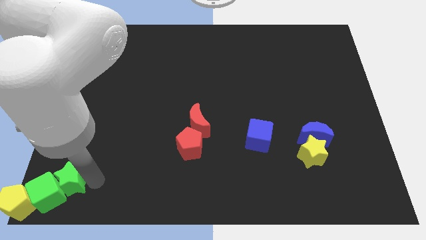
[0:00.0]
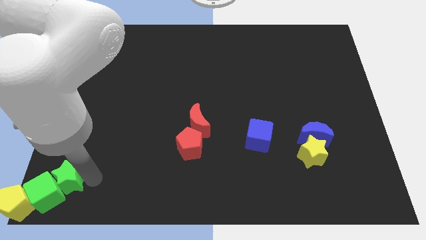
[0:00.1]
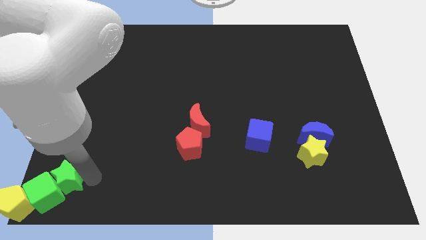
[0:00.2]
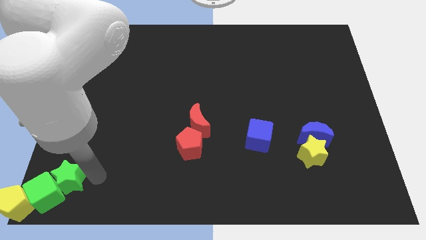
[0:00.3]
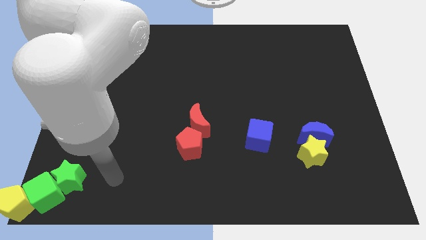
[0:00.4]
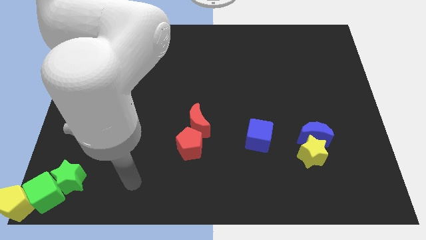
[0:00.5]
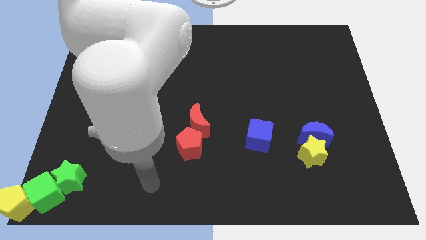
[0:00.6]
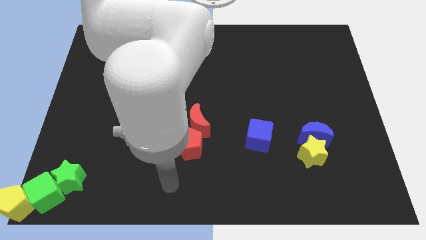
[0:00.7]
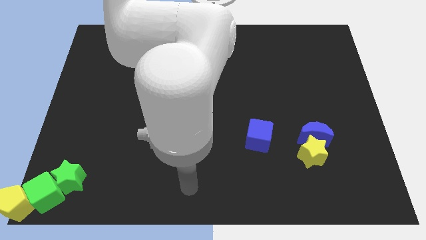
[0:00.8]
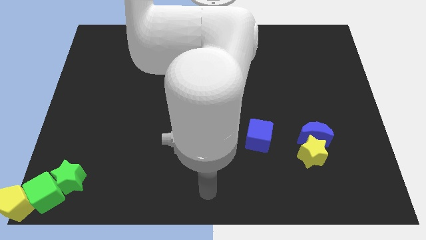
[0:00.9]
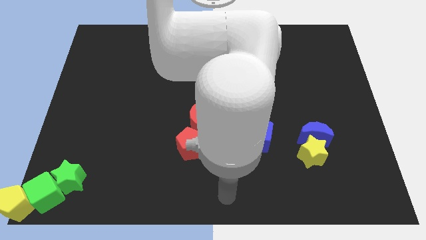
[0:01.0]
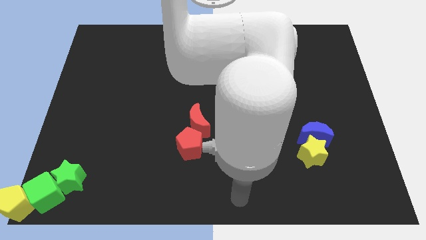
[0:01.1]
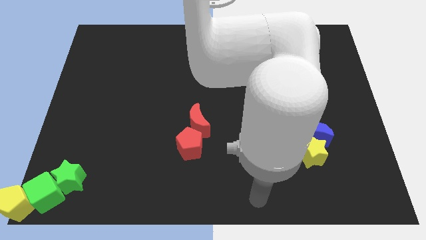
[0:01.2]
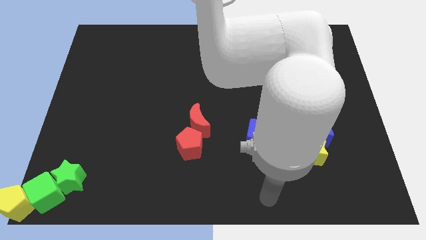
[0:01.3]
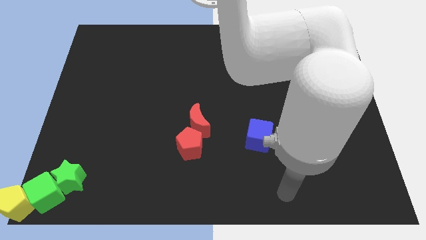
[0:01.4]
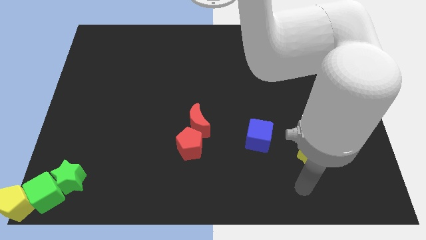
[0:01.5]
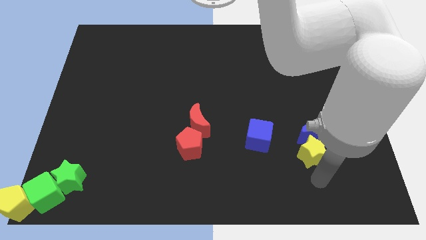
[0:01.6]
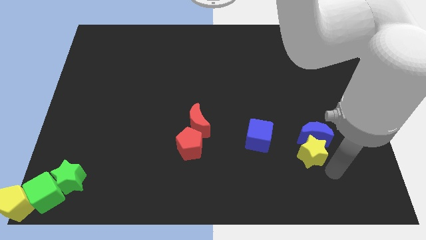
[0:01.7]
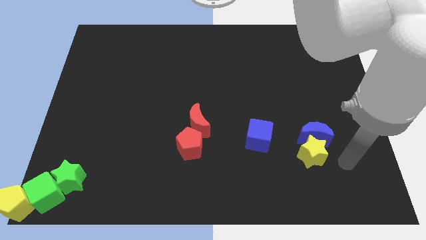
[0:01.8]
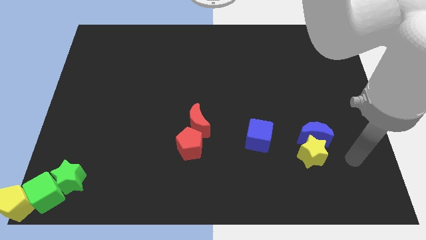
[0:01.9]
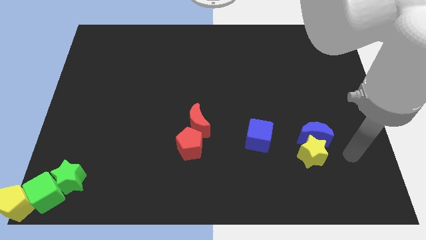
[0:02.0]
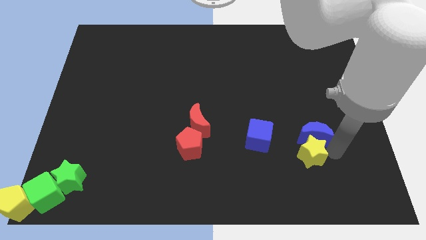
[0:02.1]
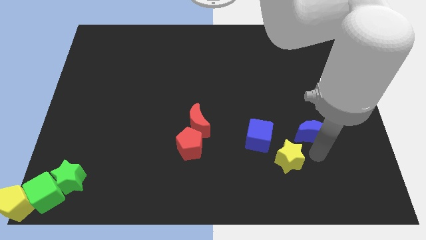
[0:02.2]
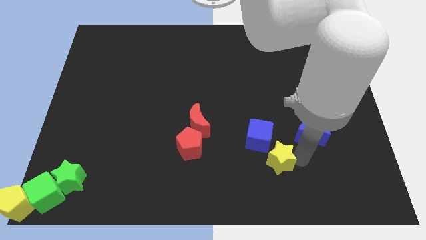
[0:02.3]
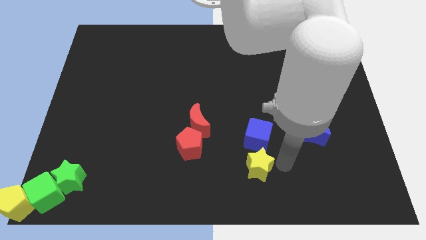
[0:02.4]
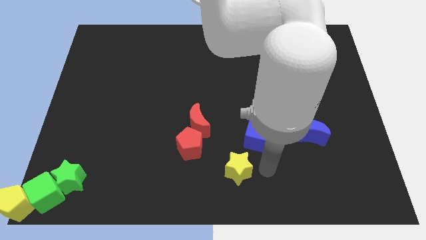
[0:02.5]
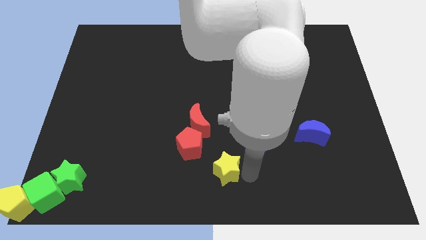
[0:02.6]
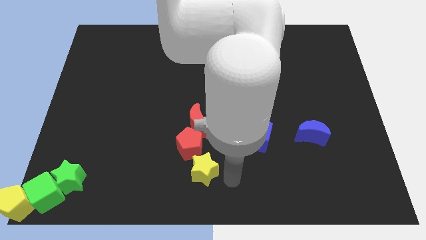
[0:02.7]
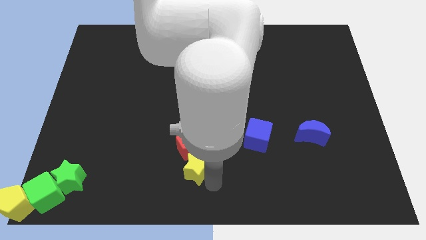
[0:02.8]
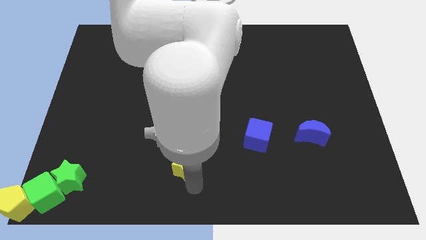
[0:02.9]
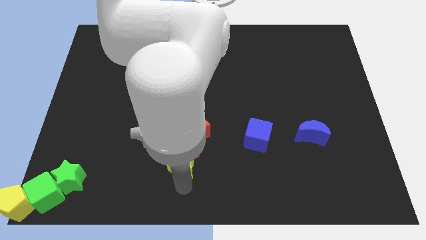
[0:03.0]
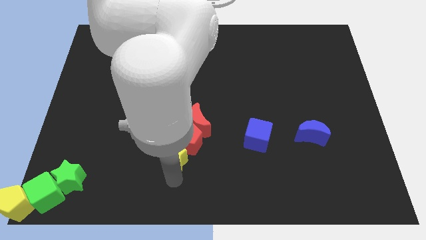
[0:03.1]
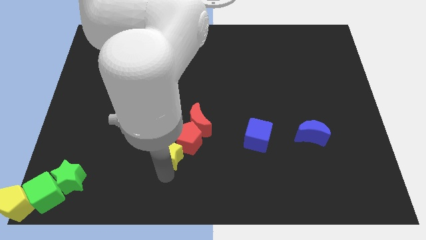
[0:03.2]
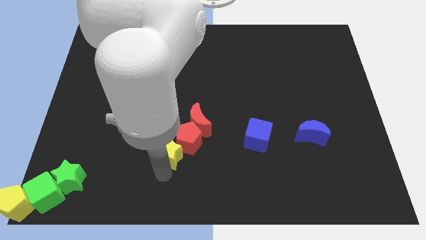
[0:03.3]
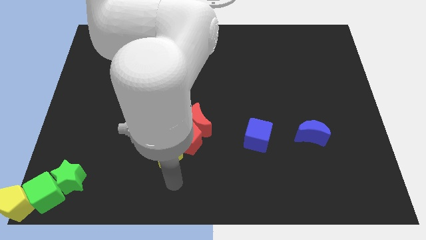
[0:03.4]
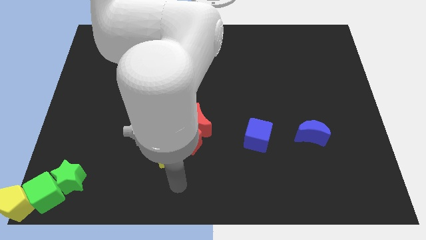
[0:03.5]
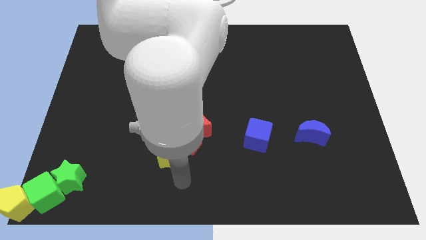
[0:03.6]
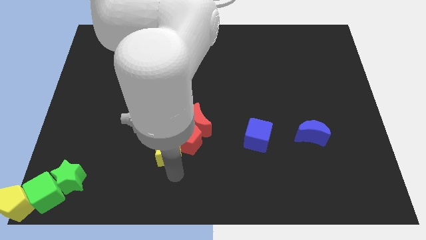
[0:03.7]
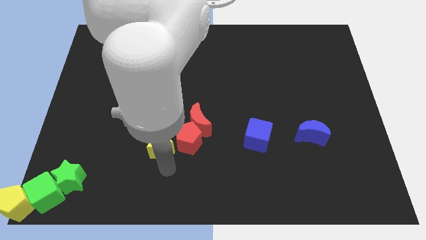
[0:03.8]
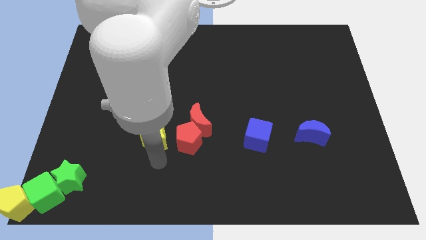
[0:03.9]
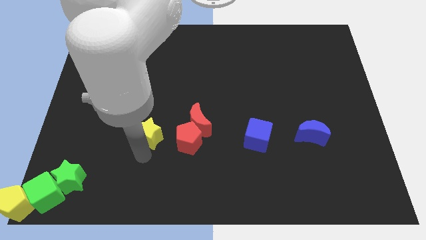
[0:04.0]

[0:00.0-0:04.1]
drag yellow star towards left to the red pentagon

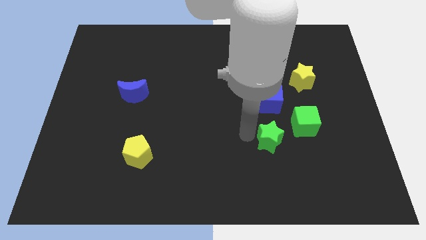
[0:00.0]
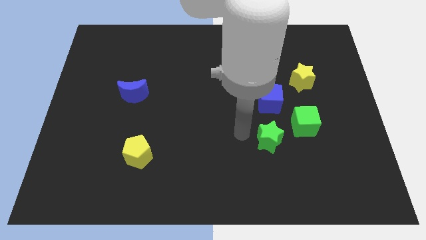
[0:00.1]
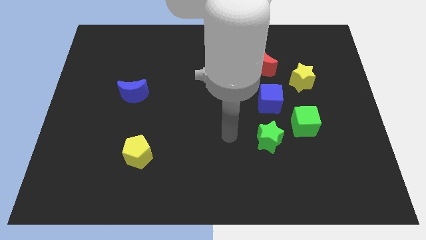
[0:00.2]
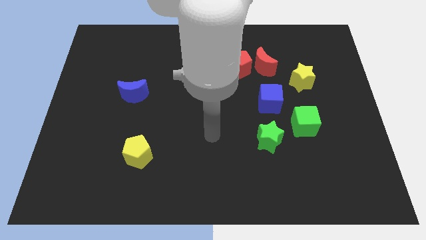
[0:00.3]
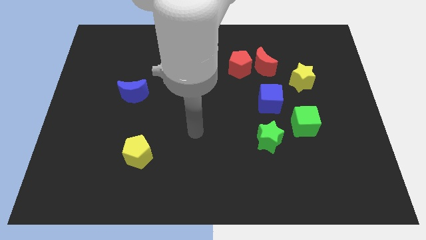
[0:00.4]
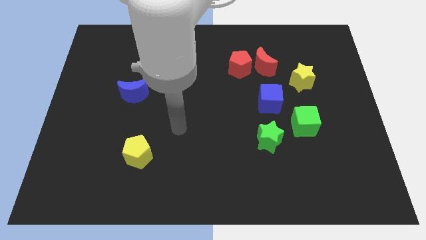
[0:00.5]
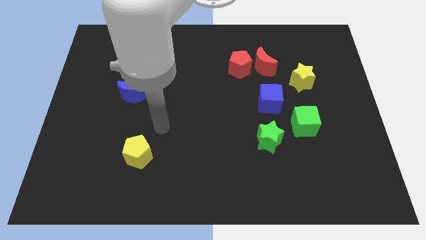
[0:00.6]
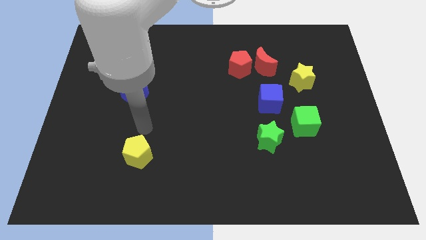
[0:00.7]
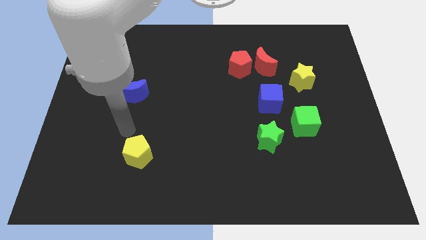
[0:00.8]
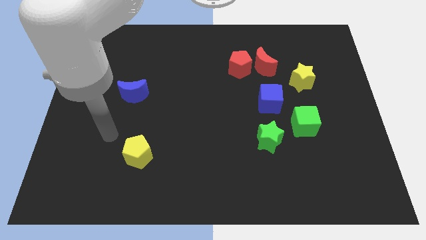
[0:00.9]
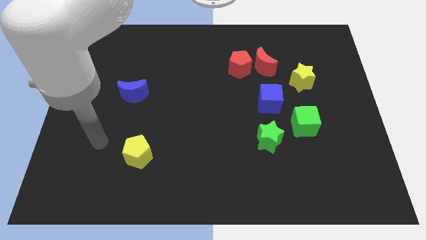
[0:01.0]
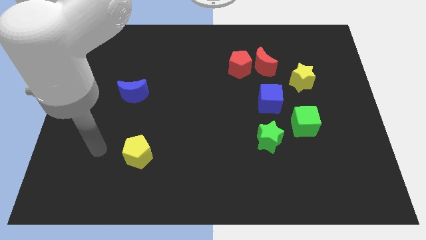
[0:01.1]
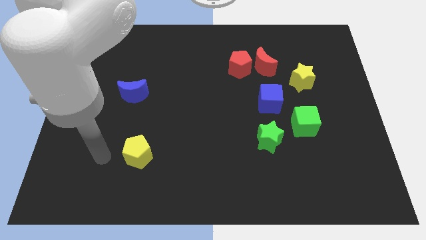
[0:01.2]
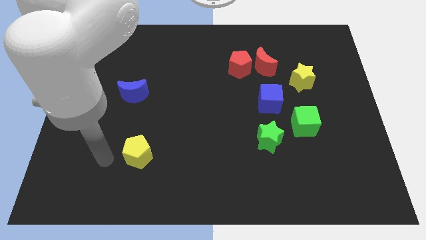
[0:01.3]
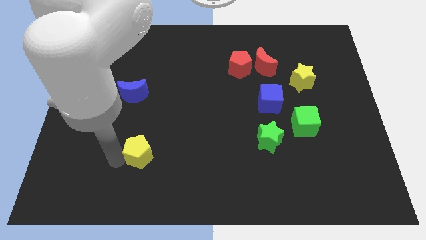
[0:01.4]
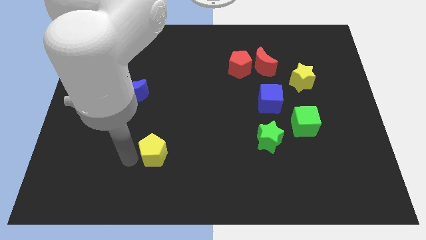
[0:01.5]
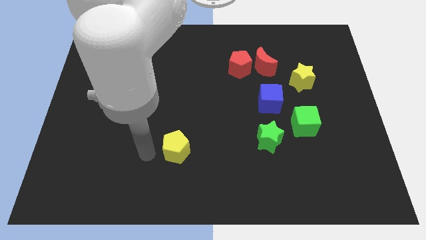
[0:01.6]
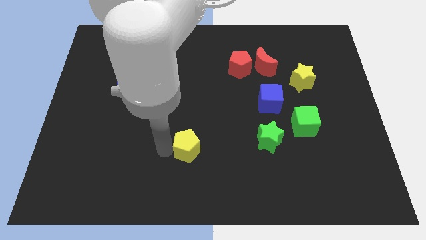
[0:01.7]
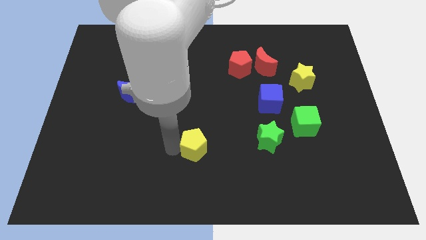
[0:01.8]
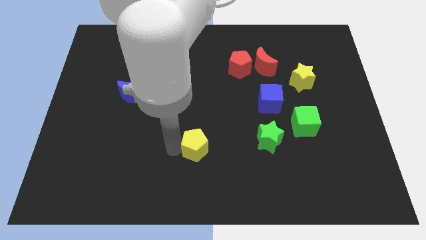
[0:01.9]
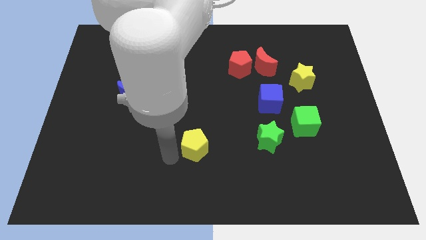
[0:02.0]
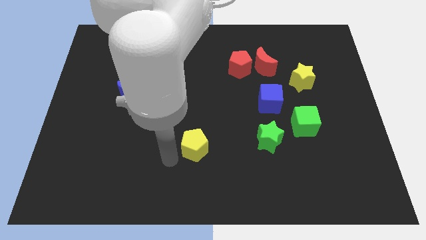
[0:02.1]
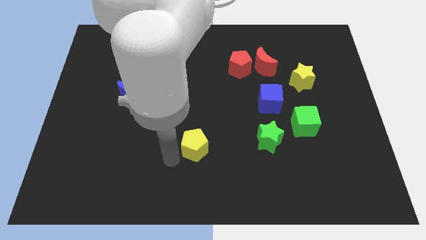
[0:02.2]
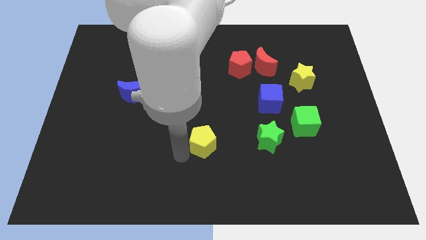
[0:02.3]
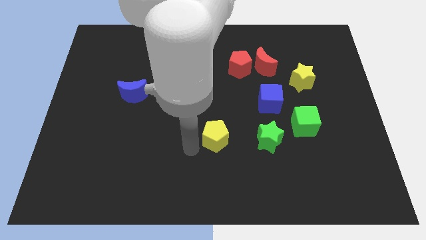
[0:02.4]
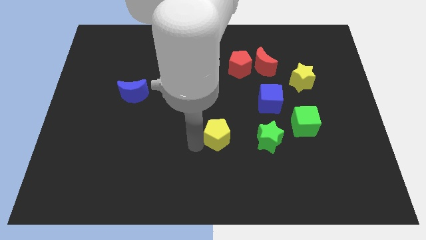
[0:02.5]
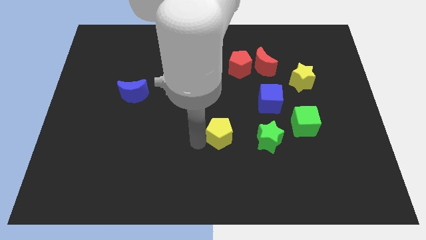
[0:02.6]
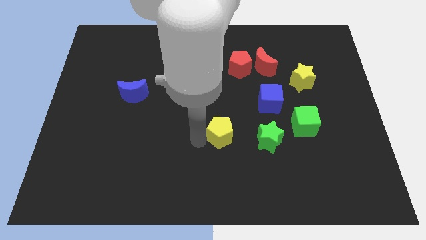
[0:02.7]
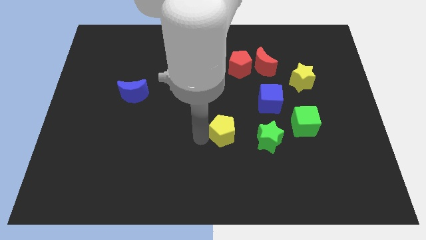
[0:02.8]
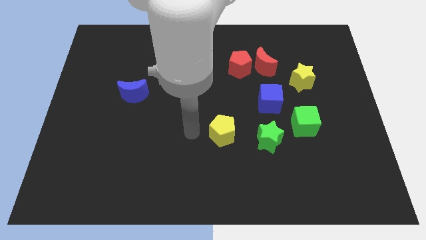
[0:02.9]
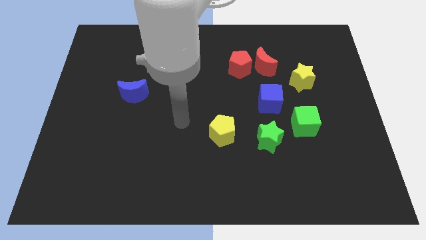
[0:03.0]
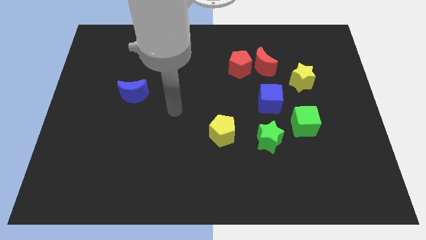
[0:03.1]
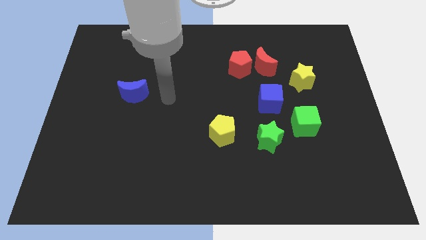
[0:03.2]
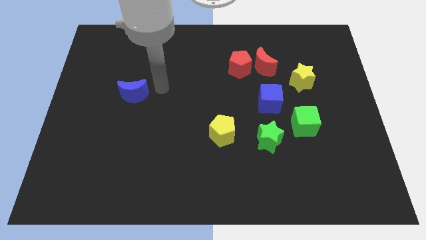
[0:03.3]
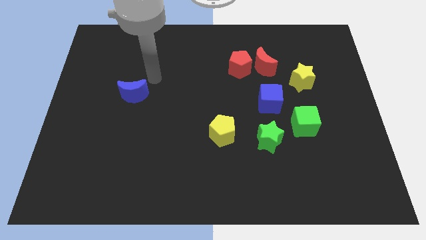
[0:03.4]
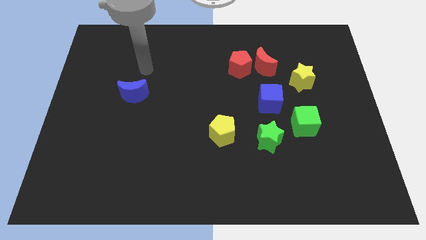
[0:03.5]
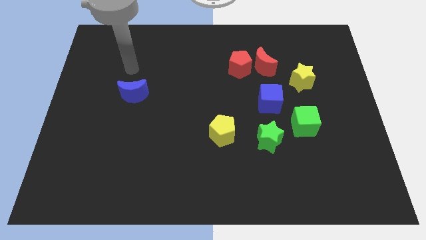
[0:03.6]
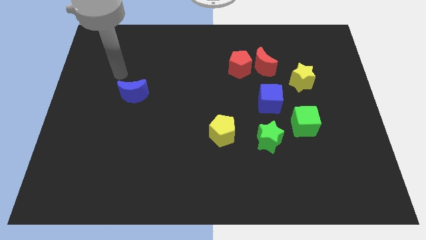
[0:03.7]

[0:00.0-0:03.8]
move the yellow pentagon parallel left to the green star

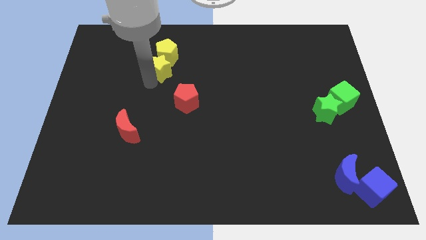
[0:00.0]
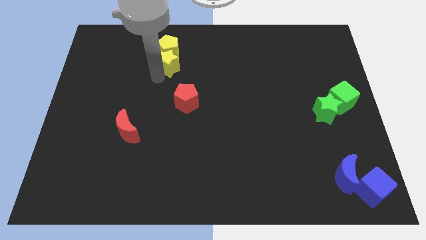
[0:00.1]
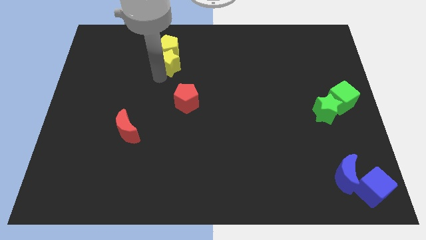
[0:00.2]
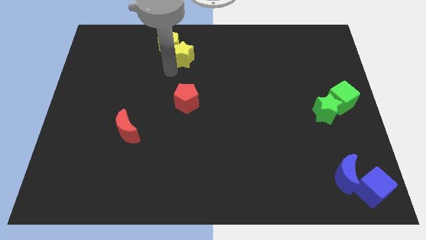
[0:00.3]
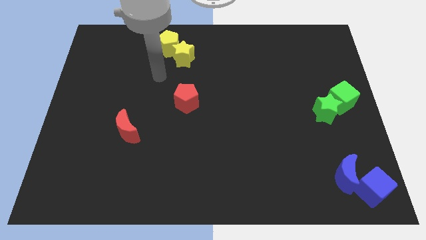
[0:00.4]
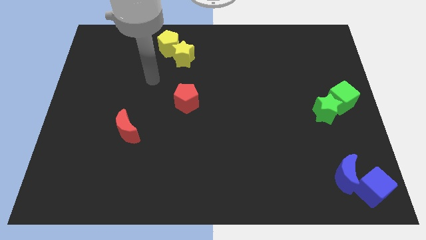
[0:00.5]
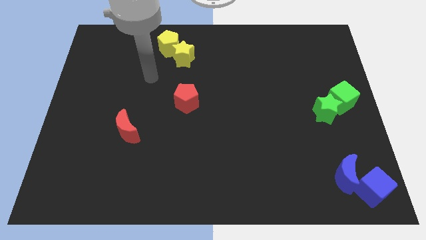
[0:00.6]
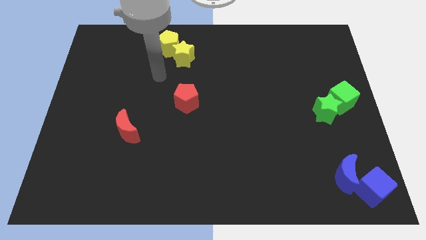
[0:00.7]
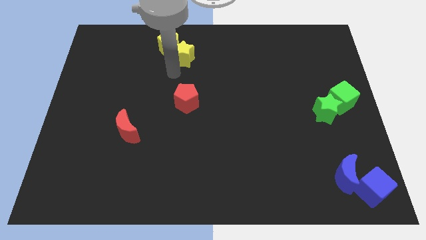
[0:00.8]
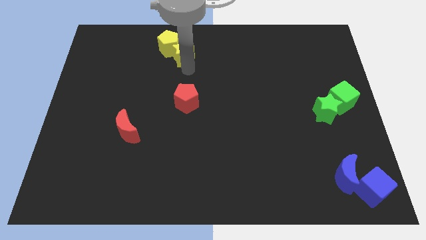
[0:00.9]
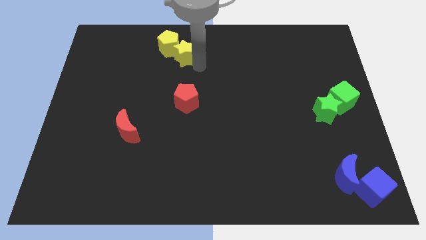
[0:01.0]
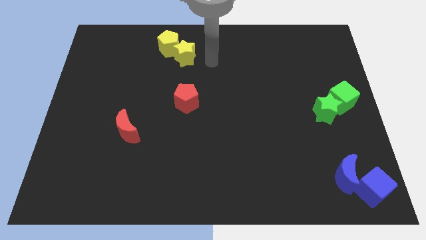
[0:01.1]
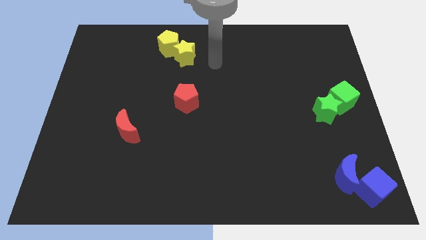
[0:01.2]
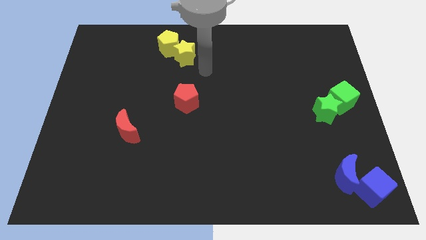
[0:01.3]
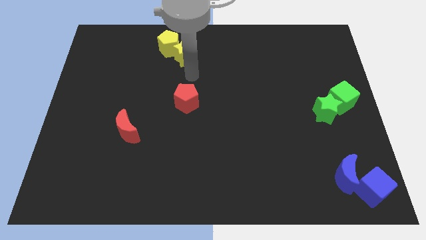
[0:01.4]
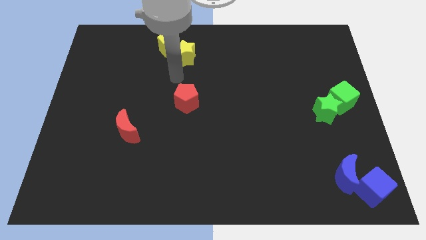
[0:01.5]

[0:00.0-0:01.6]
push the yellow star and yellow pentagon slightly to the top center of the board
